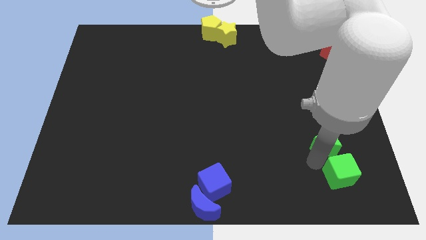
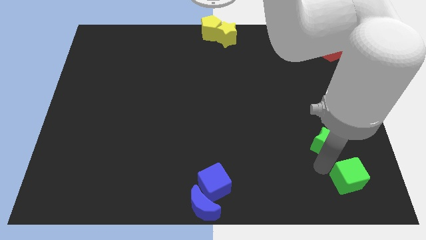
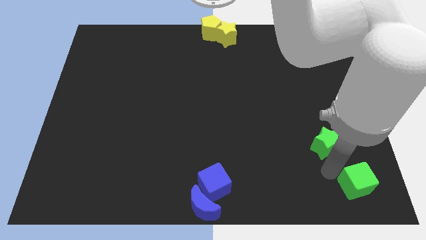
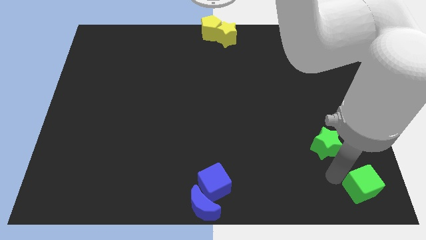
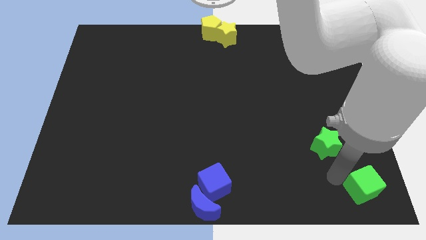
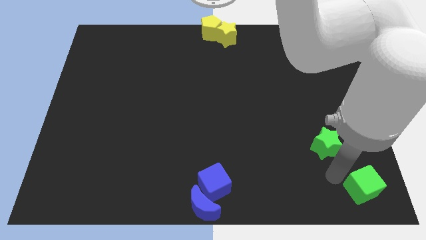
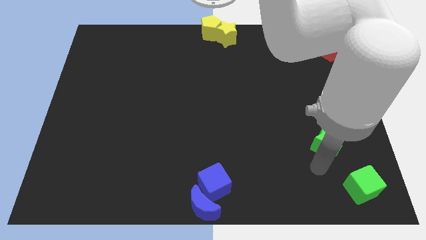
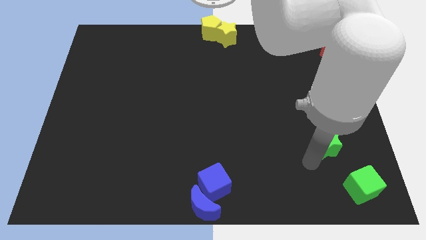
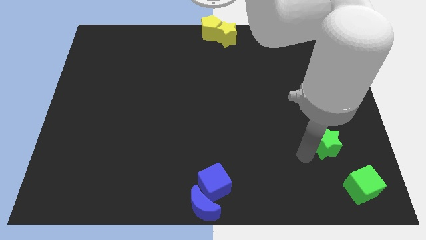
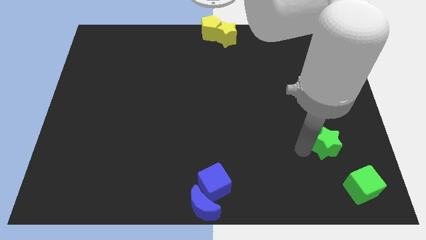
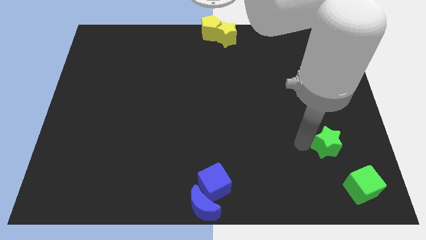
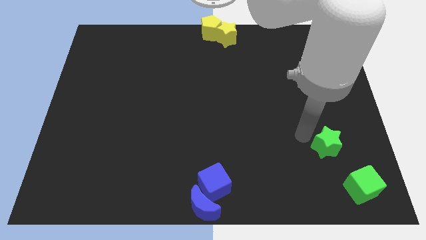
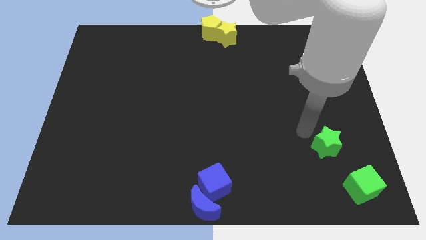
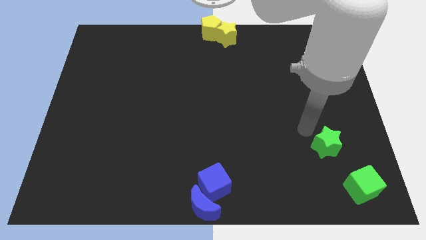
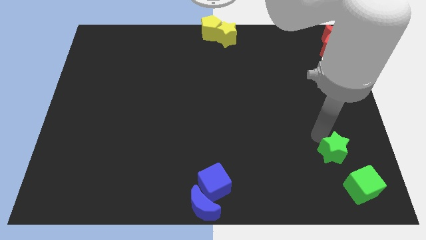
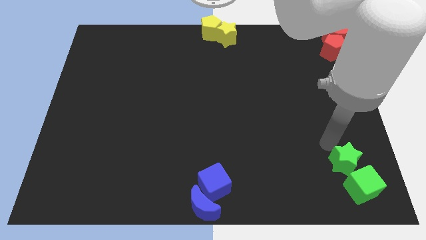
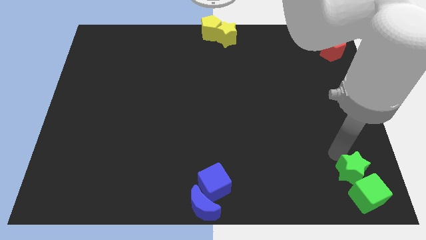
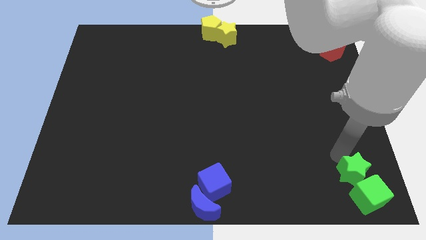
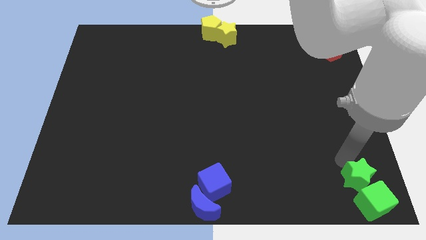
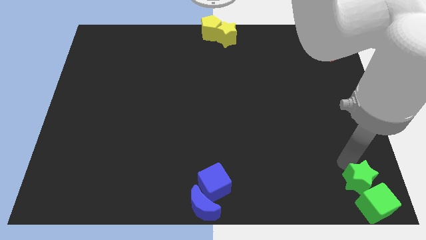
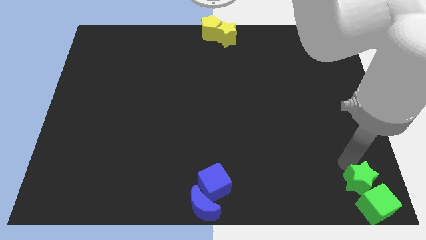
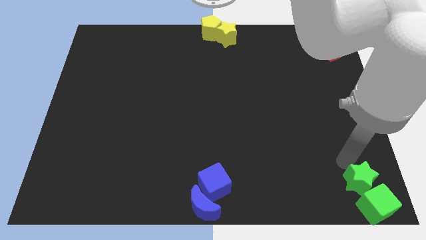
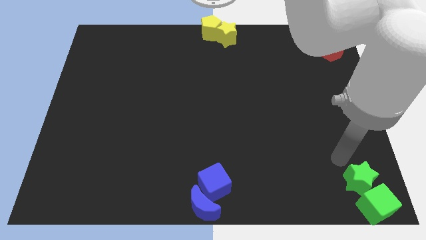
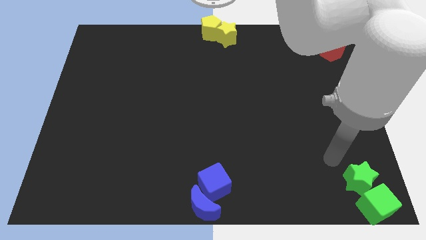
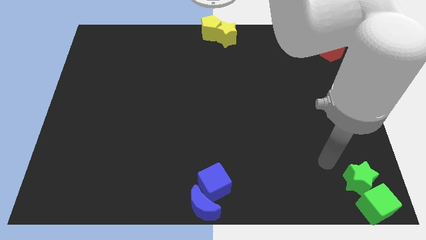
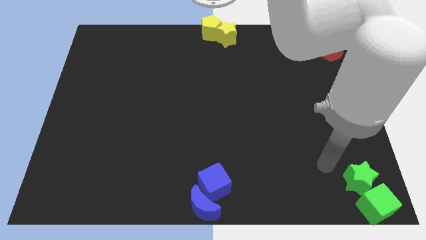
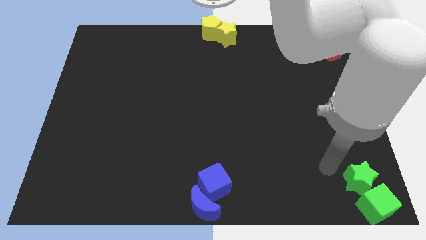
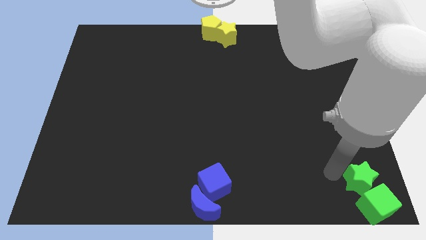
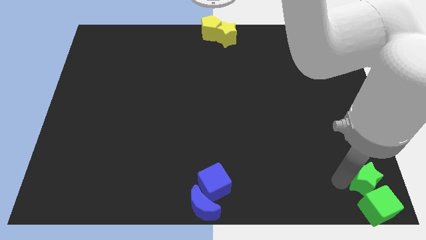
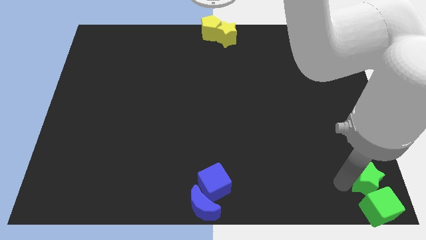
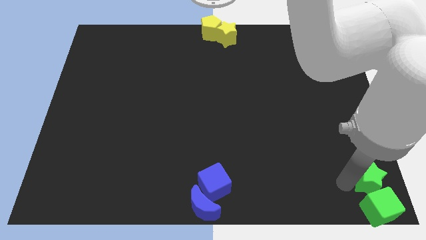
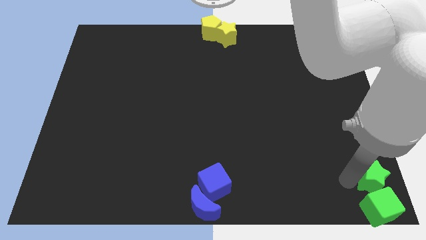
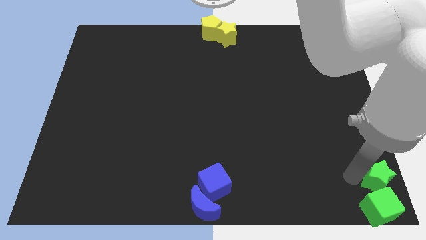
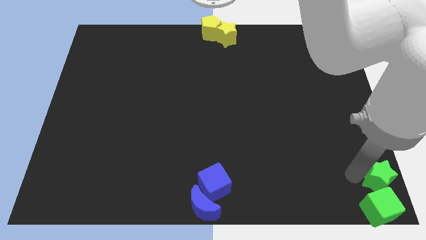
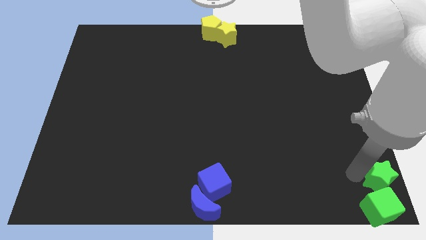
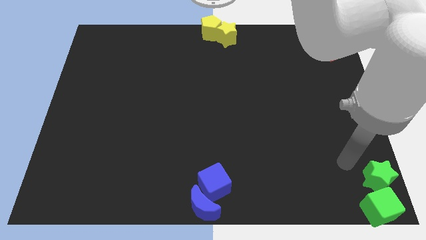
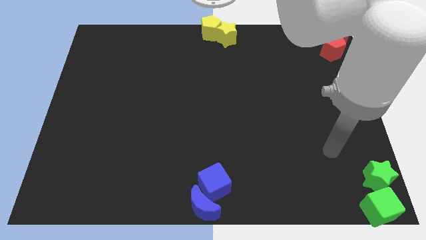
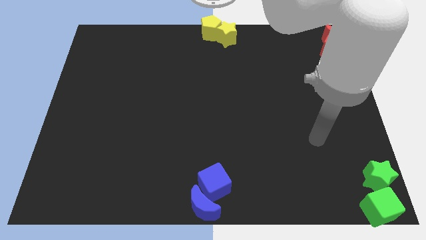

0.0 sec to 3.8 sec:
move green blocks to the bottom right corner of the board

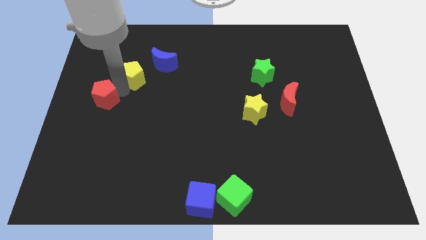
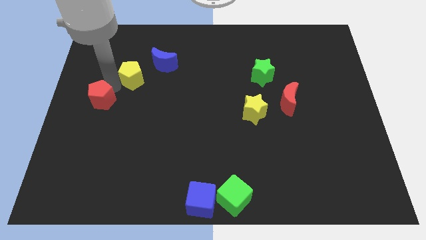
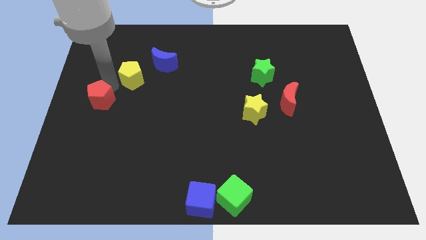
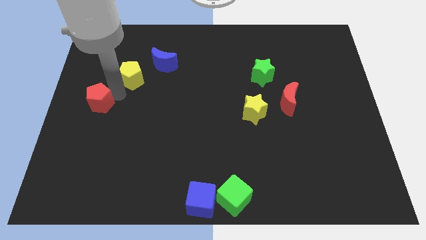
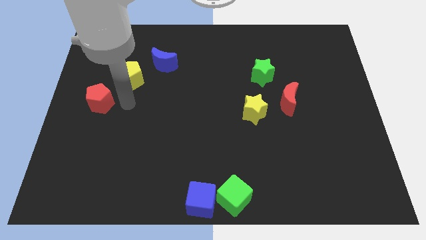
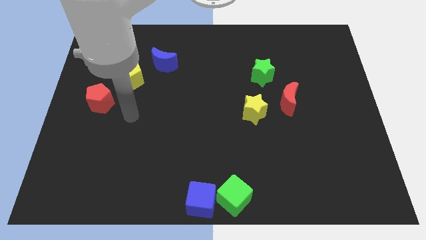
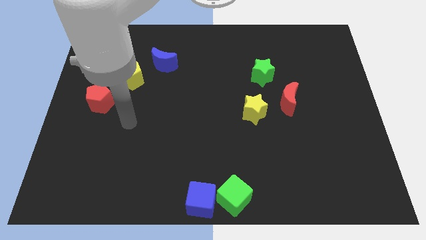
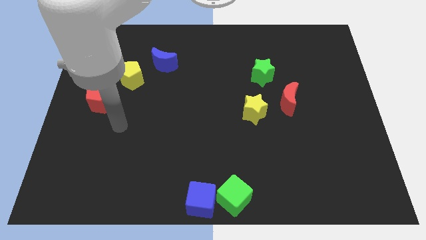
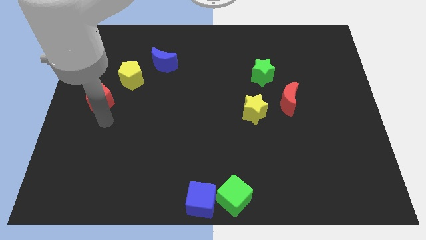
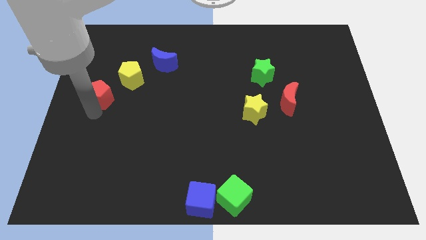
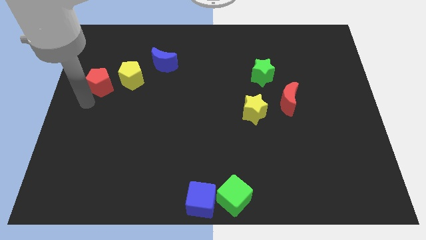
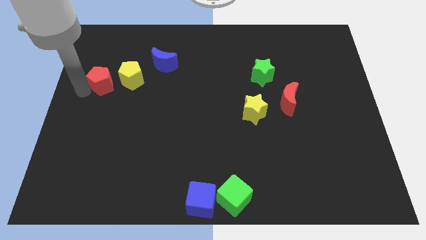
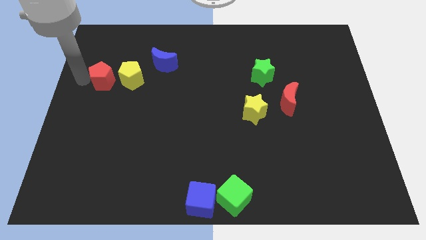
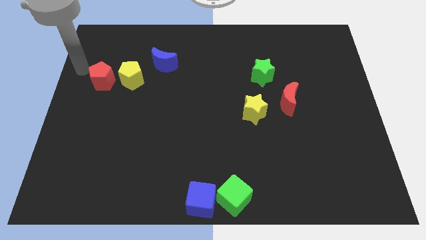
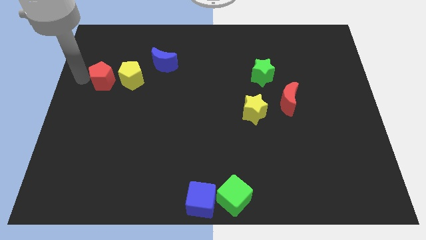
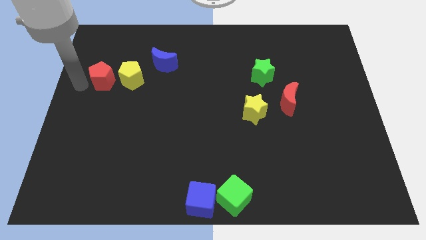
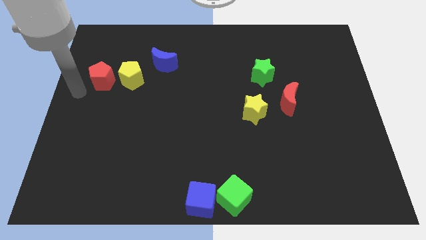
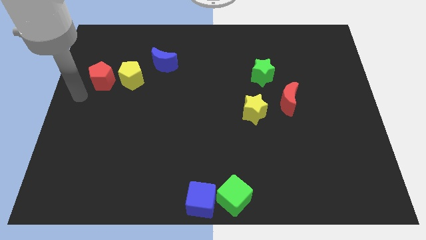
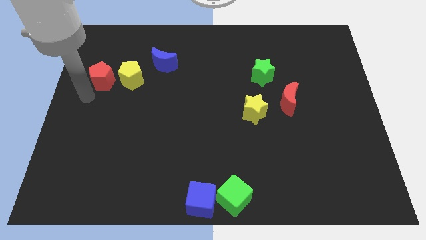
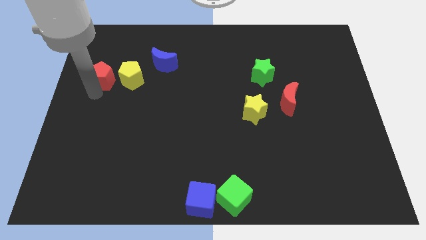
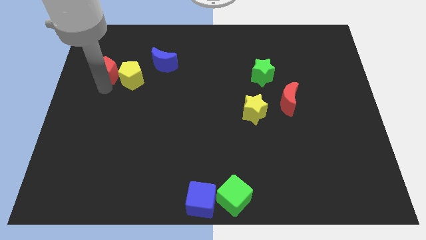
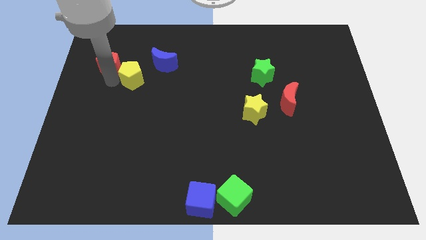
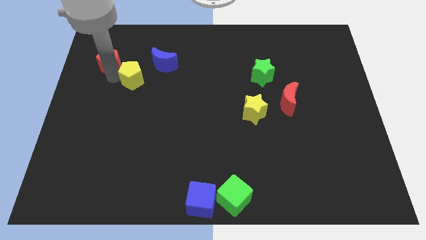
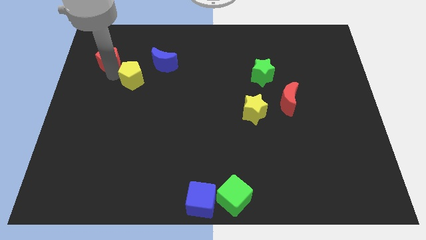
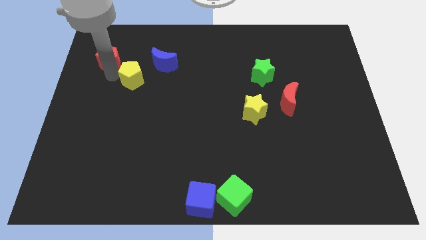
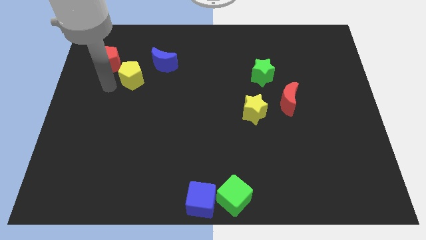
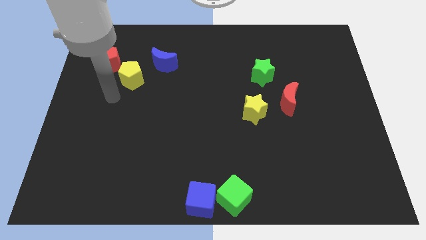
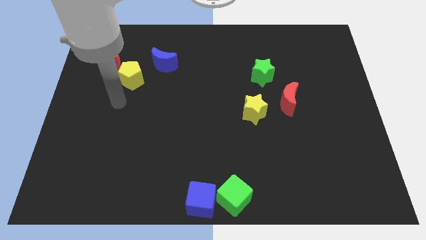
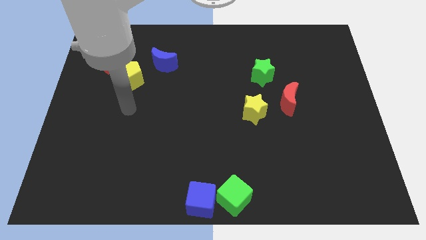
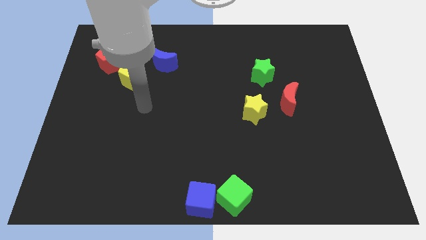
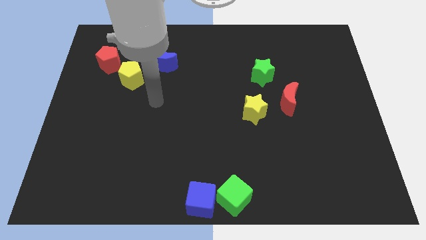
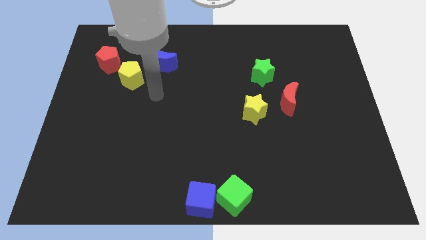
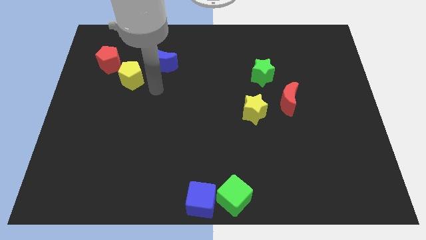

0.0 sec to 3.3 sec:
move the red pentagon to the top left of the yellow pentagon

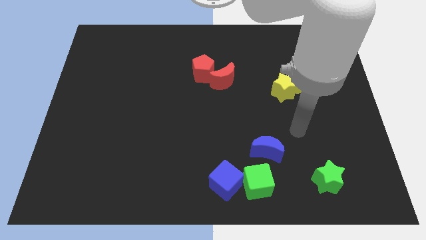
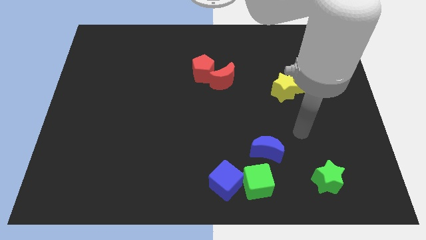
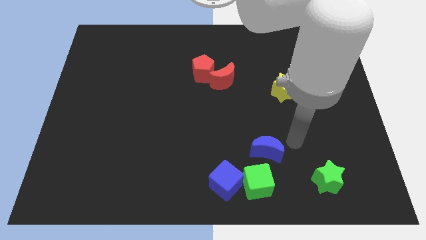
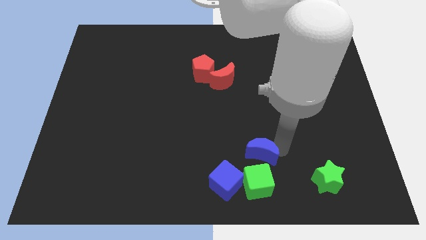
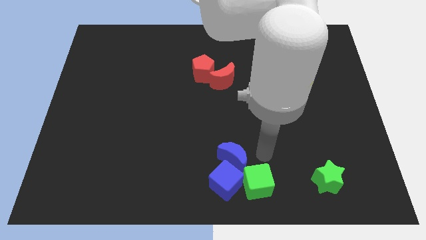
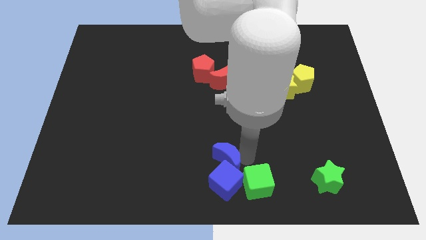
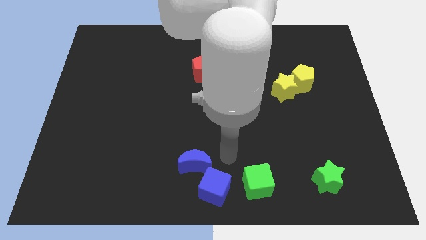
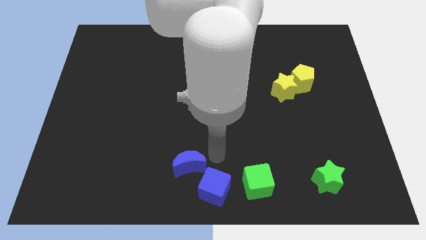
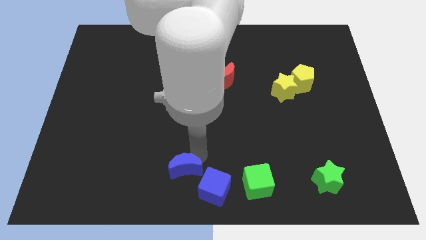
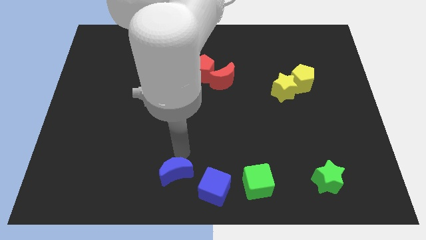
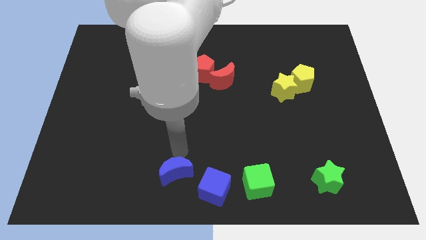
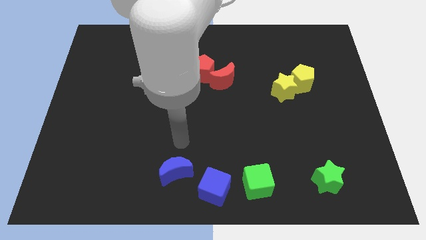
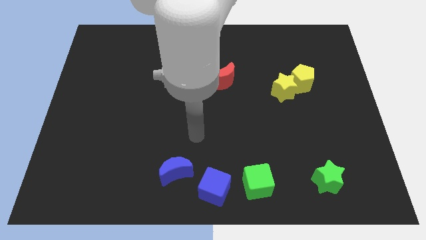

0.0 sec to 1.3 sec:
move the blue crescent to the left side of the blue cube

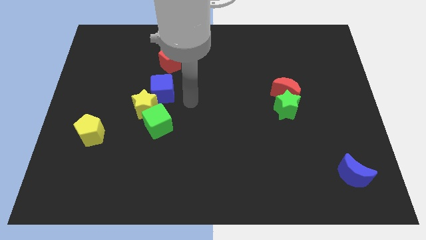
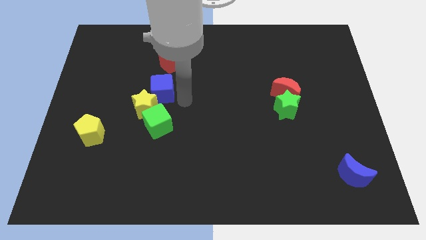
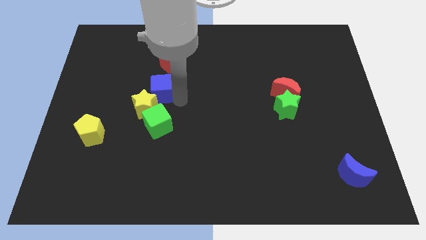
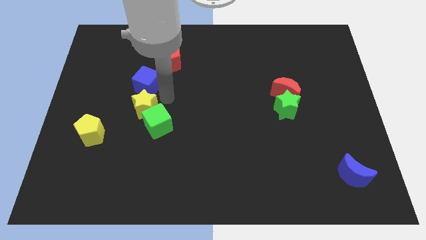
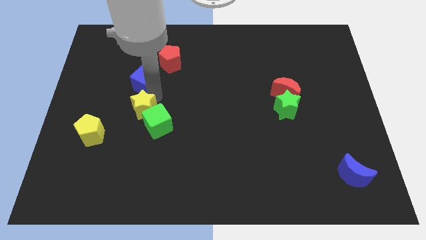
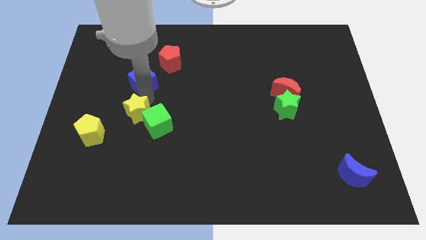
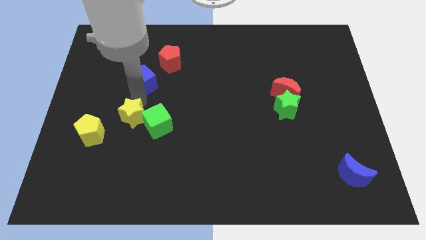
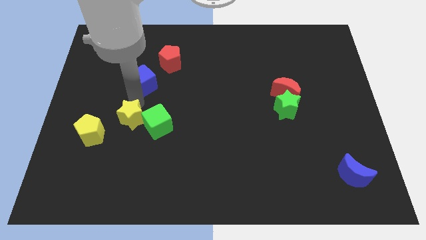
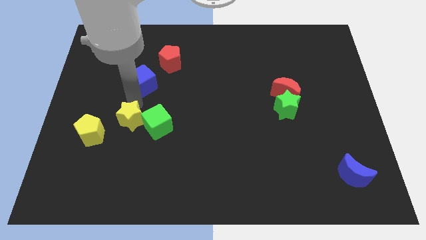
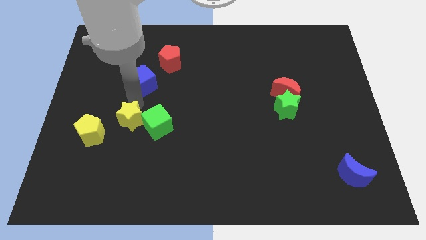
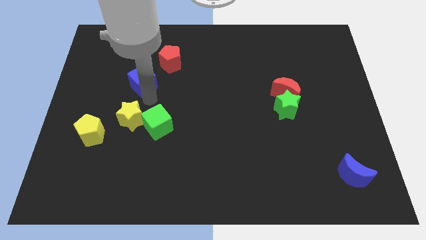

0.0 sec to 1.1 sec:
separate the yellow star and blue cube
